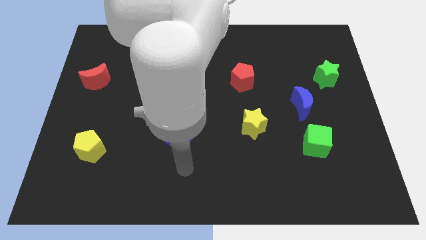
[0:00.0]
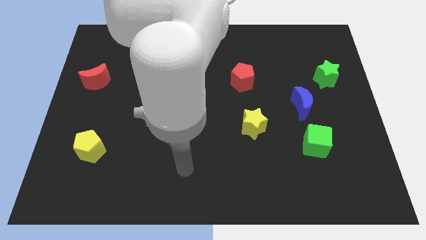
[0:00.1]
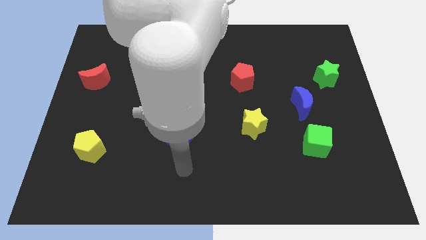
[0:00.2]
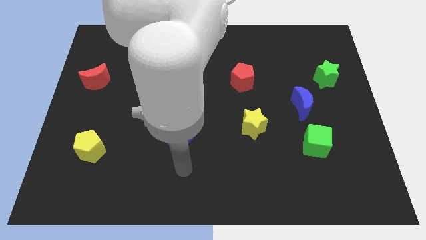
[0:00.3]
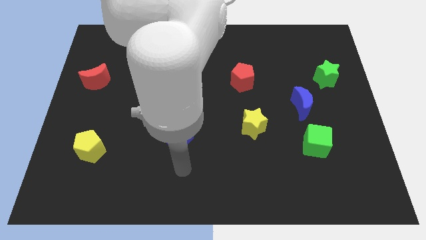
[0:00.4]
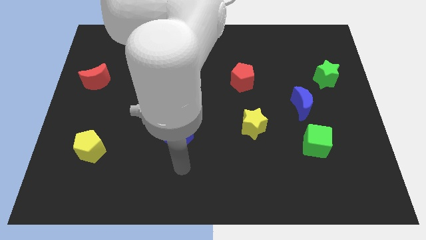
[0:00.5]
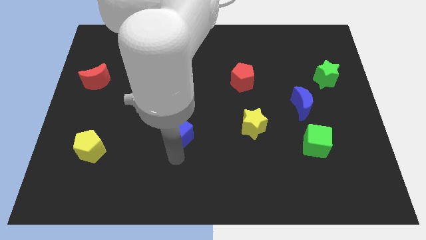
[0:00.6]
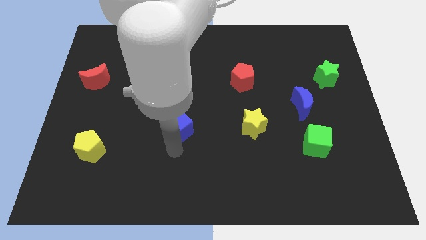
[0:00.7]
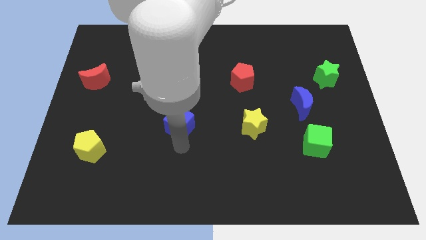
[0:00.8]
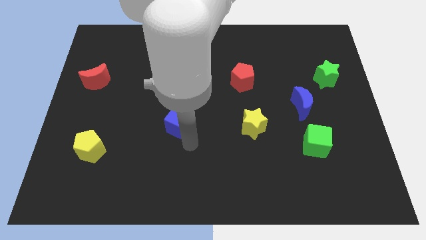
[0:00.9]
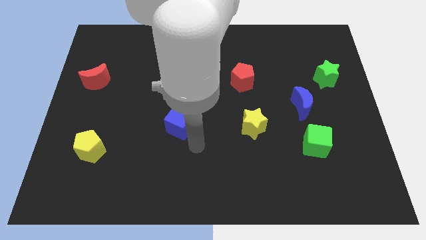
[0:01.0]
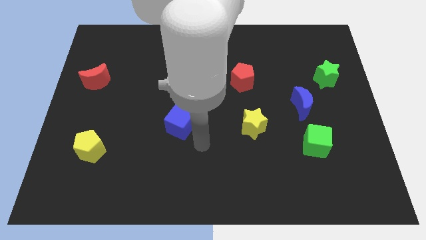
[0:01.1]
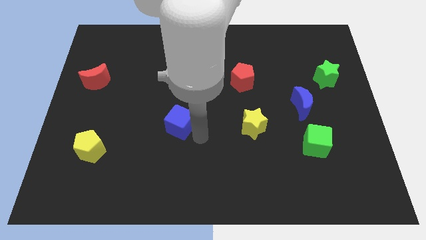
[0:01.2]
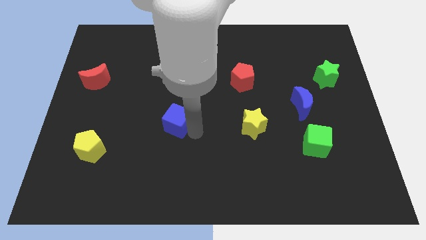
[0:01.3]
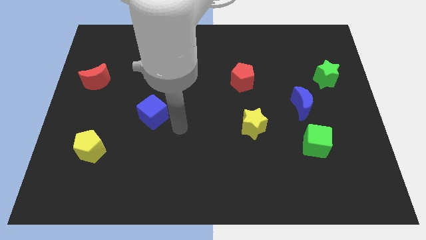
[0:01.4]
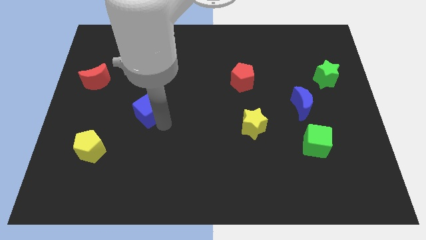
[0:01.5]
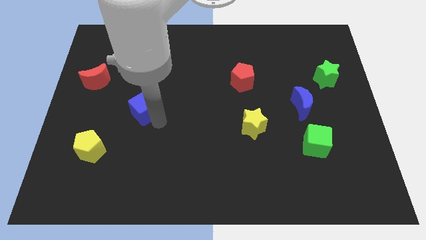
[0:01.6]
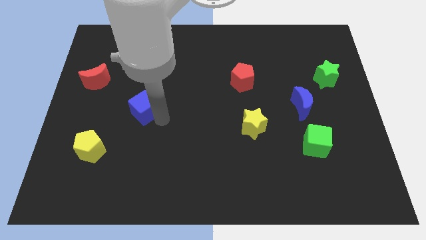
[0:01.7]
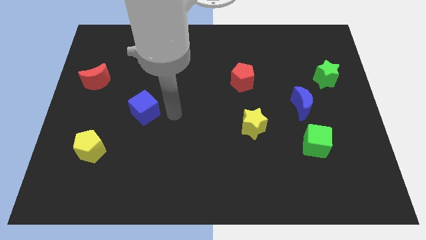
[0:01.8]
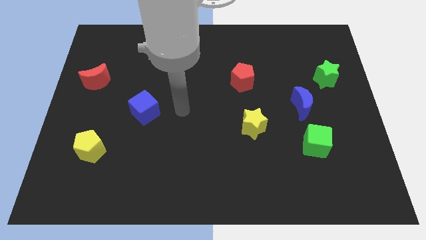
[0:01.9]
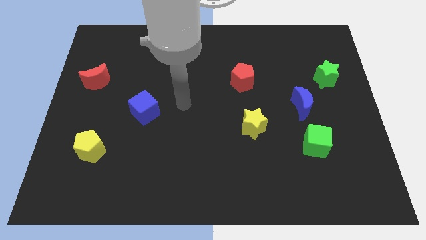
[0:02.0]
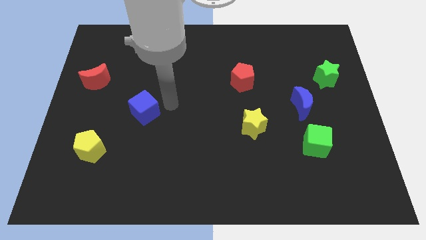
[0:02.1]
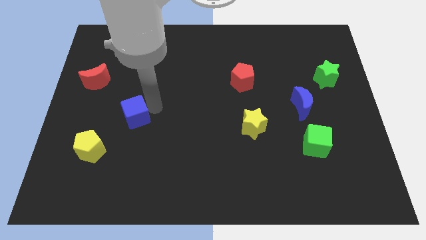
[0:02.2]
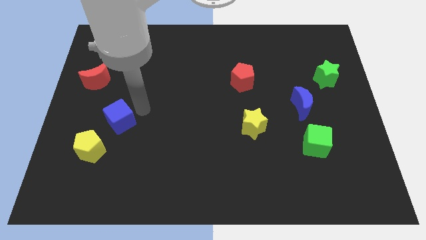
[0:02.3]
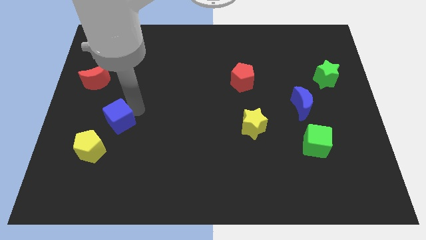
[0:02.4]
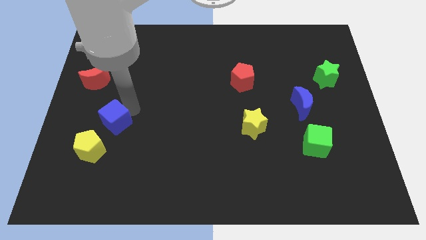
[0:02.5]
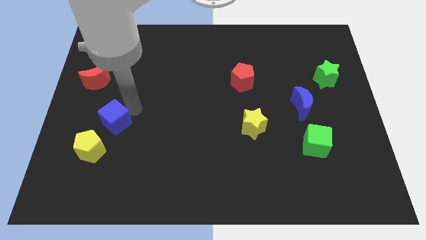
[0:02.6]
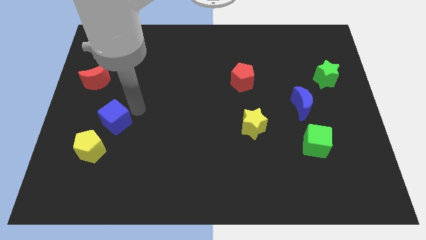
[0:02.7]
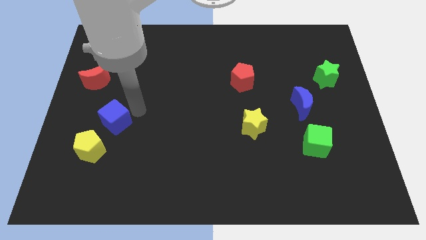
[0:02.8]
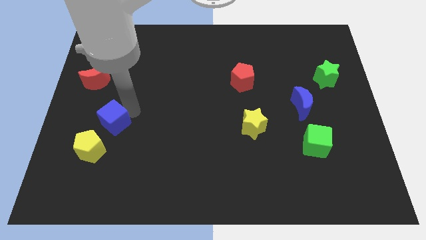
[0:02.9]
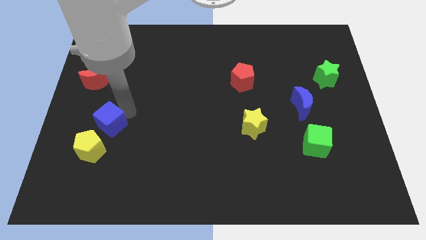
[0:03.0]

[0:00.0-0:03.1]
place the blue cube diagonally to the yellow pentagon

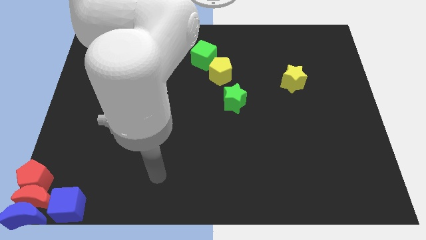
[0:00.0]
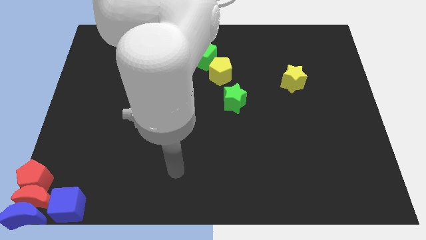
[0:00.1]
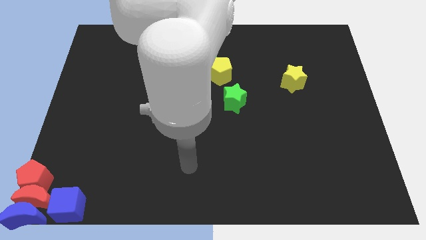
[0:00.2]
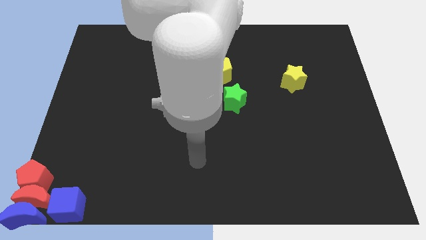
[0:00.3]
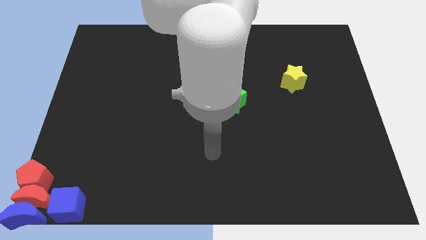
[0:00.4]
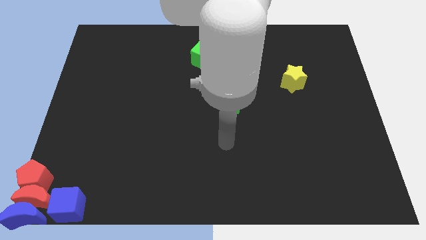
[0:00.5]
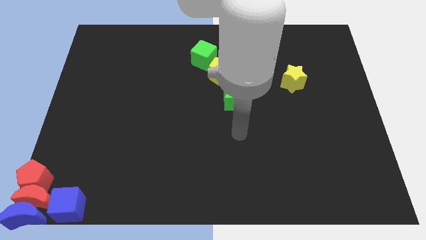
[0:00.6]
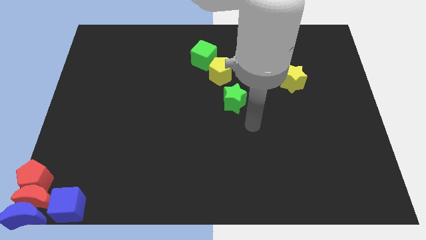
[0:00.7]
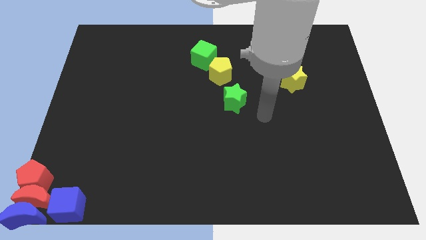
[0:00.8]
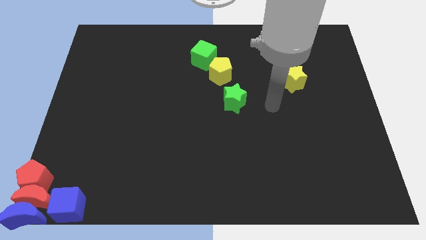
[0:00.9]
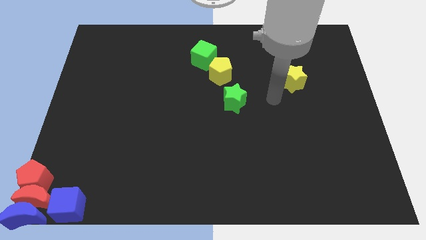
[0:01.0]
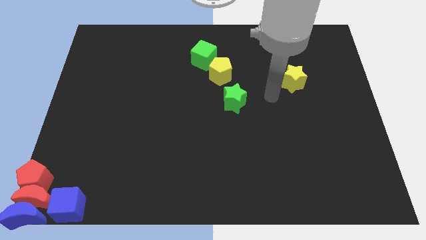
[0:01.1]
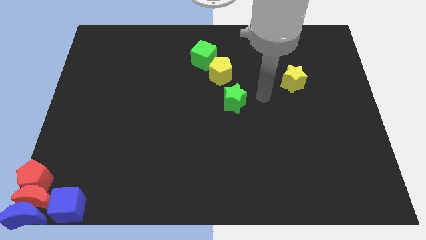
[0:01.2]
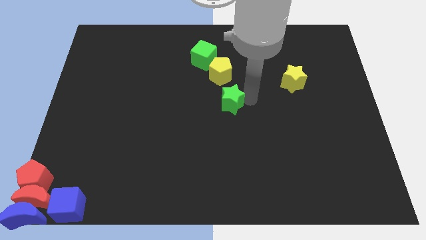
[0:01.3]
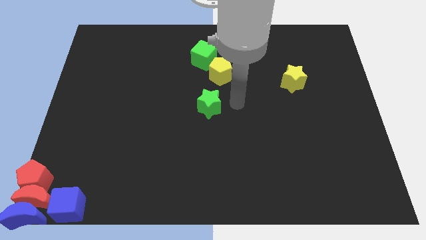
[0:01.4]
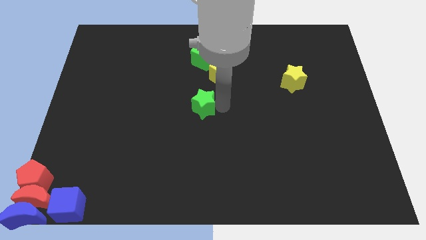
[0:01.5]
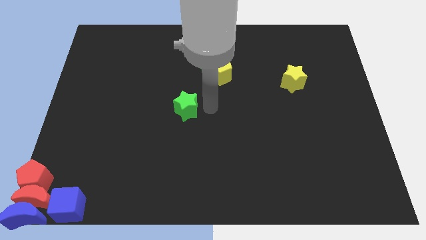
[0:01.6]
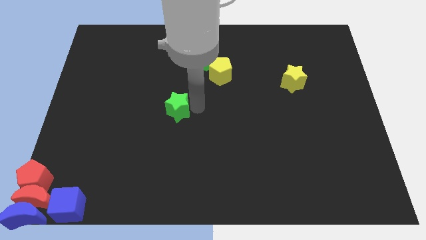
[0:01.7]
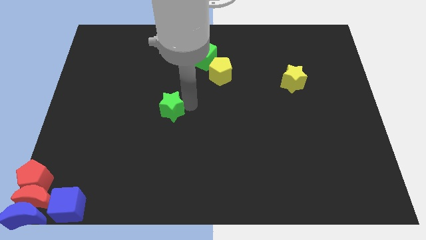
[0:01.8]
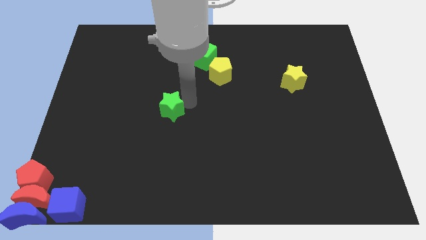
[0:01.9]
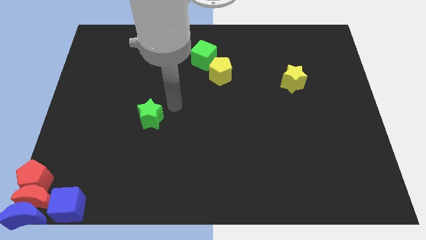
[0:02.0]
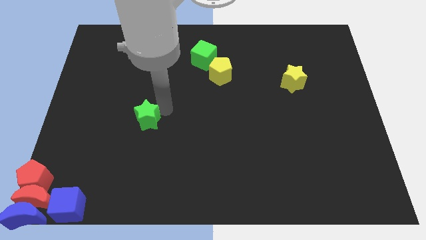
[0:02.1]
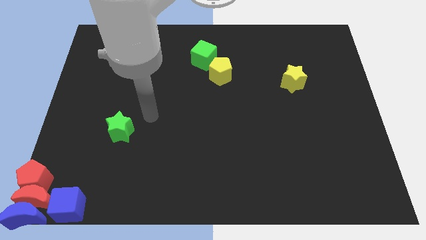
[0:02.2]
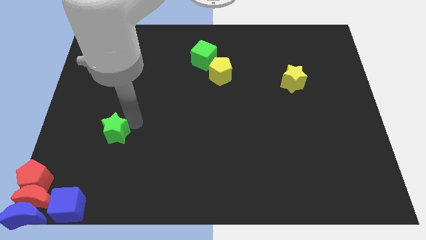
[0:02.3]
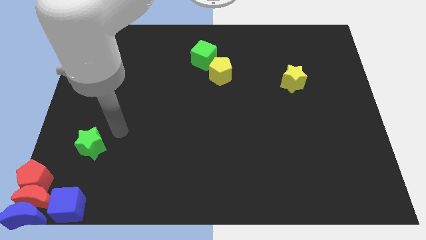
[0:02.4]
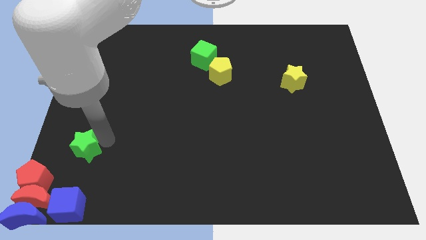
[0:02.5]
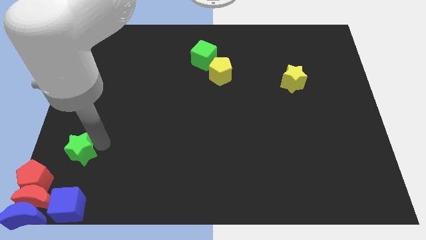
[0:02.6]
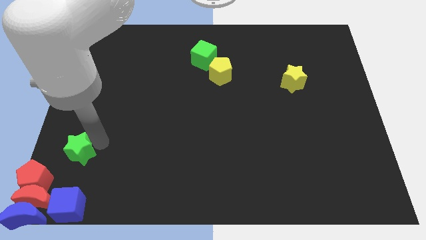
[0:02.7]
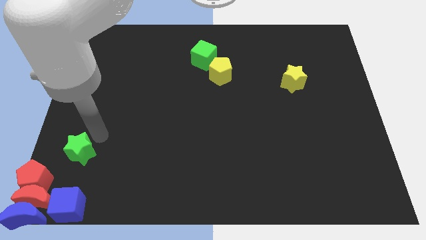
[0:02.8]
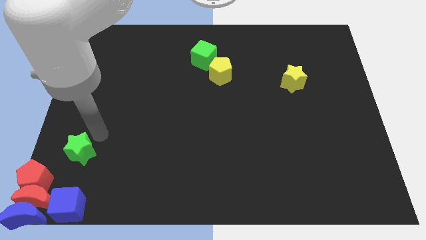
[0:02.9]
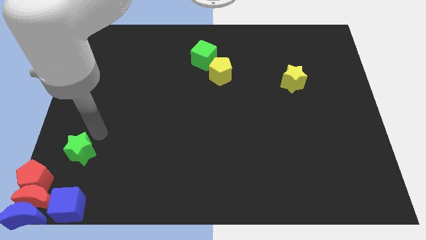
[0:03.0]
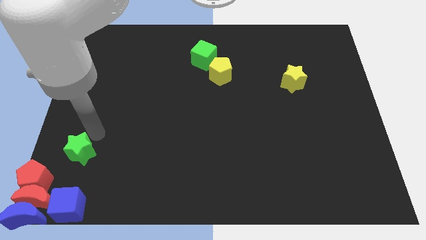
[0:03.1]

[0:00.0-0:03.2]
place the green star diagonally top right to the red pentagon

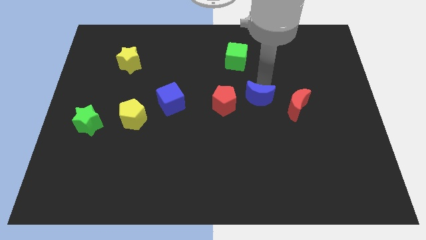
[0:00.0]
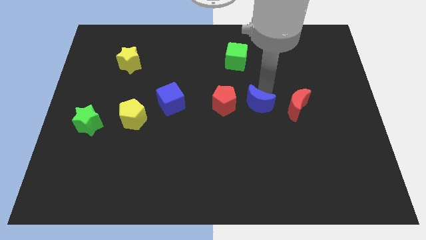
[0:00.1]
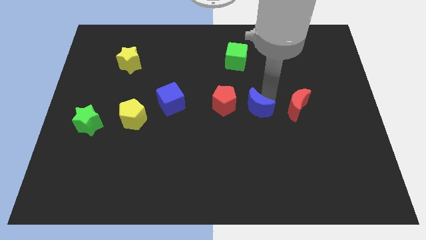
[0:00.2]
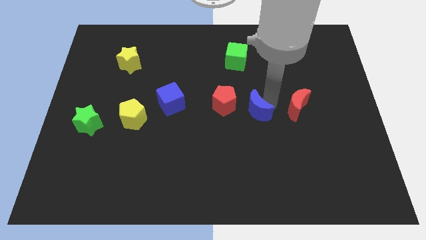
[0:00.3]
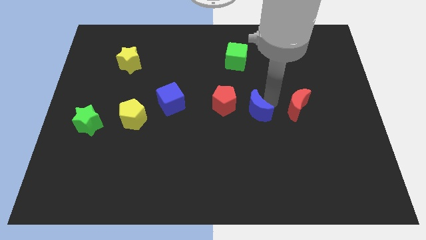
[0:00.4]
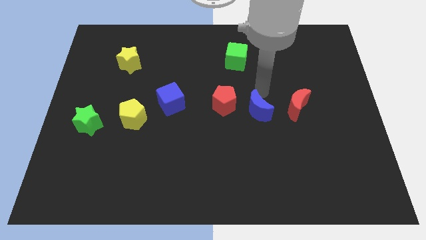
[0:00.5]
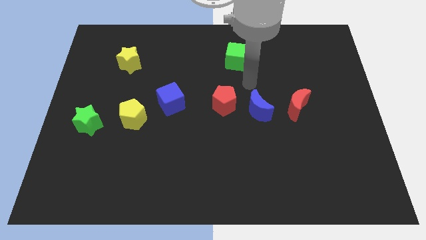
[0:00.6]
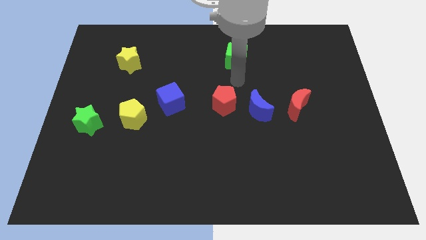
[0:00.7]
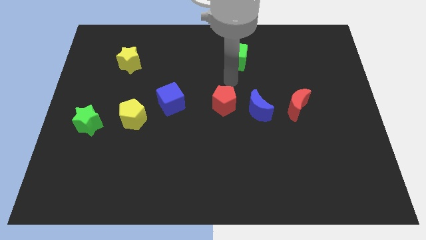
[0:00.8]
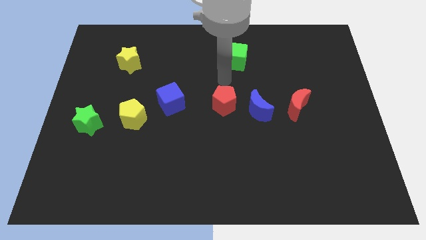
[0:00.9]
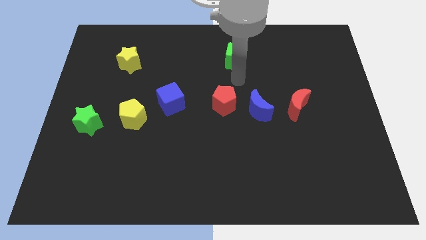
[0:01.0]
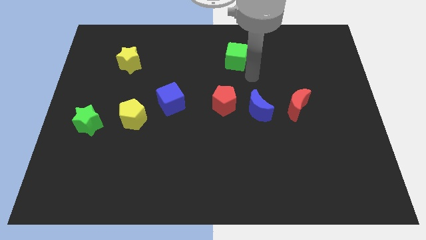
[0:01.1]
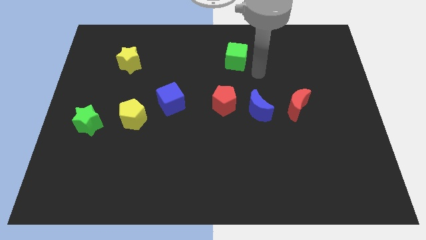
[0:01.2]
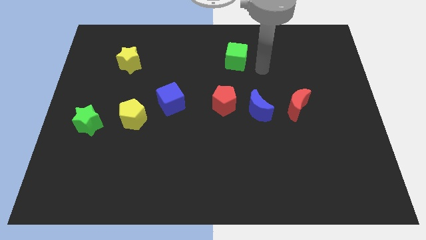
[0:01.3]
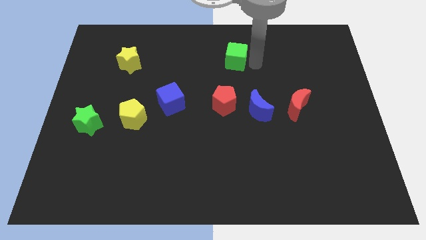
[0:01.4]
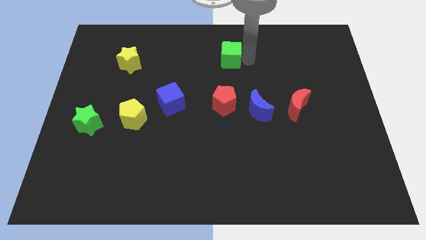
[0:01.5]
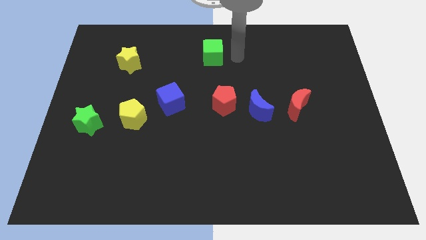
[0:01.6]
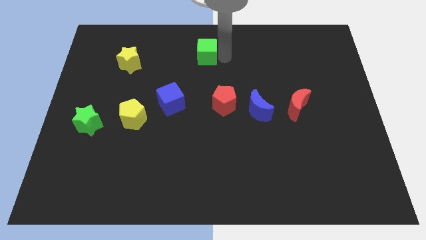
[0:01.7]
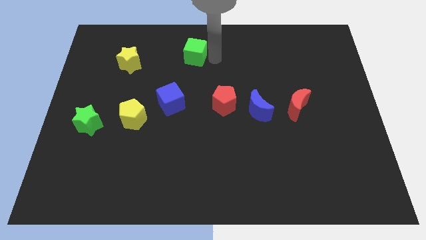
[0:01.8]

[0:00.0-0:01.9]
place the green cube diagoanally to blue cube

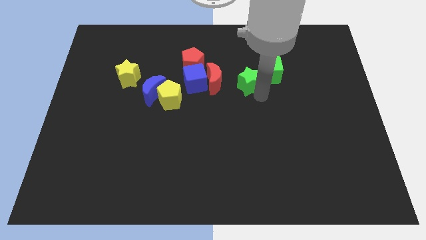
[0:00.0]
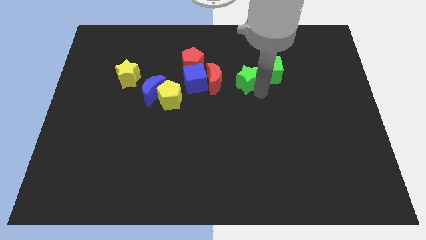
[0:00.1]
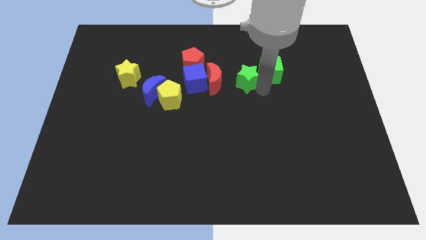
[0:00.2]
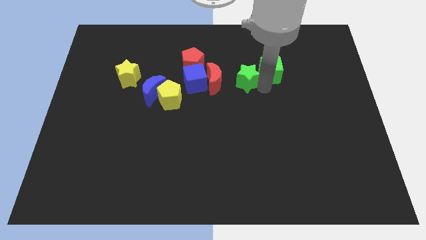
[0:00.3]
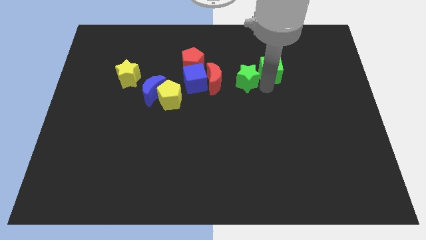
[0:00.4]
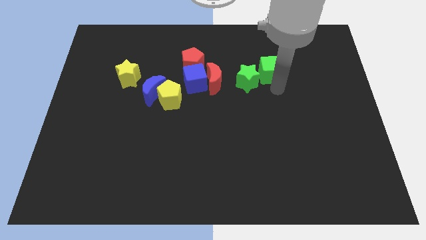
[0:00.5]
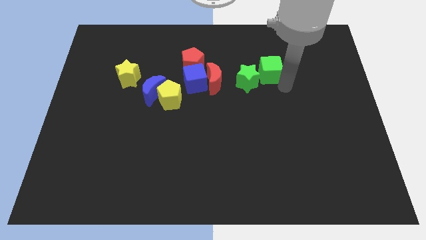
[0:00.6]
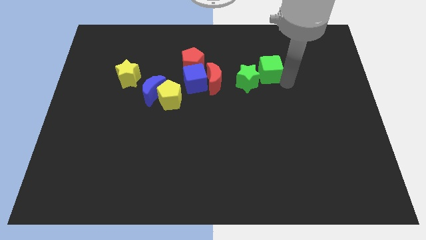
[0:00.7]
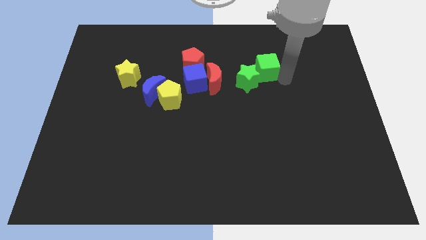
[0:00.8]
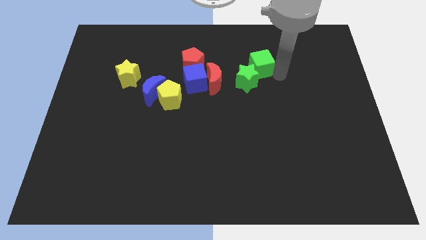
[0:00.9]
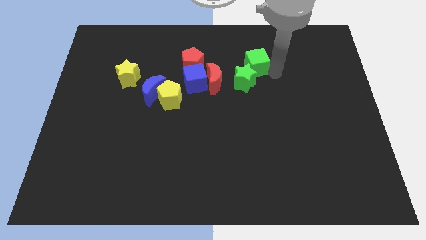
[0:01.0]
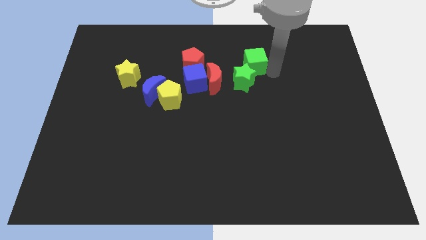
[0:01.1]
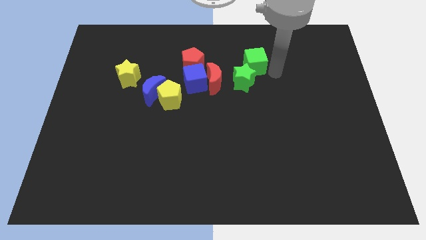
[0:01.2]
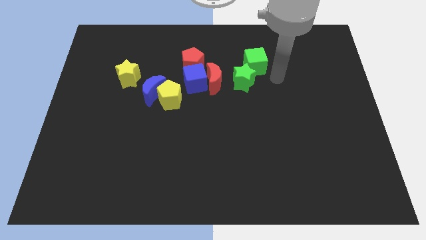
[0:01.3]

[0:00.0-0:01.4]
place green cube to the top right of the green star
